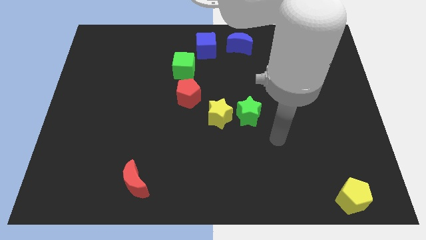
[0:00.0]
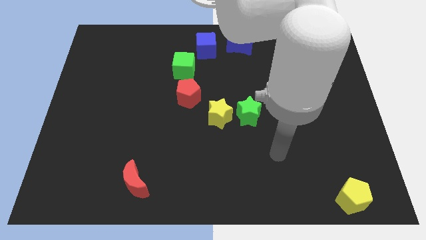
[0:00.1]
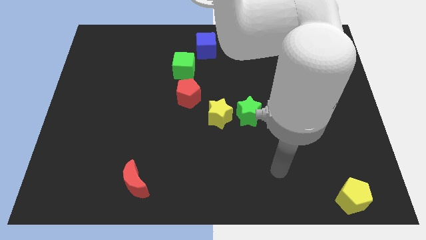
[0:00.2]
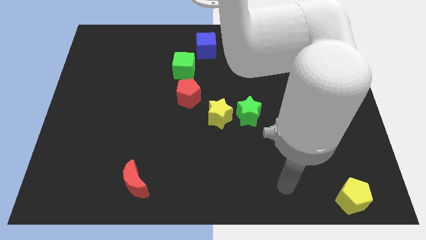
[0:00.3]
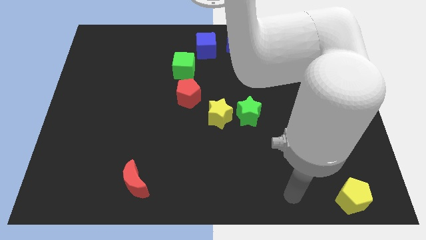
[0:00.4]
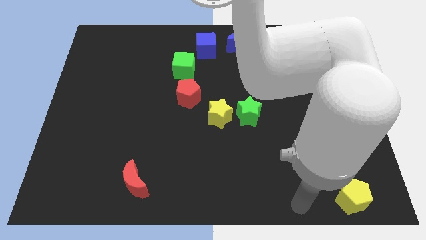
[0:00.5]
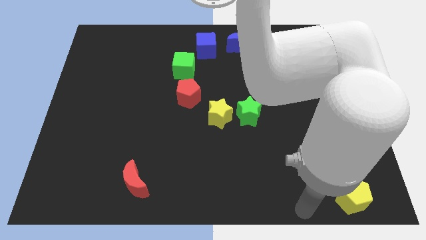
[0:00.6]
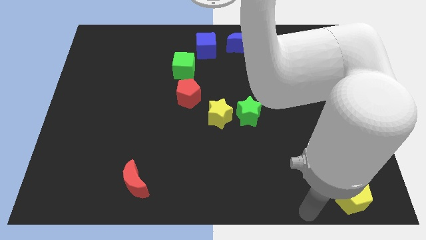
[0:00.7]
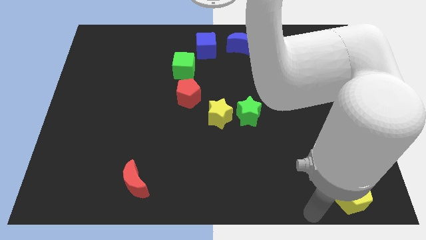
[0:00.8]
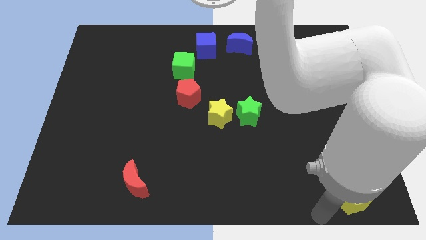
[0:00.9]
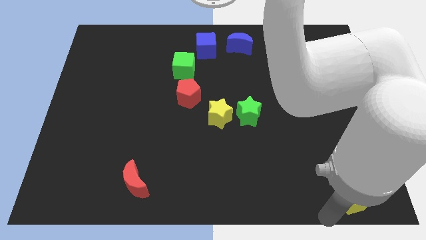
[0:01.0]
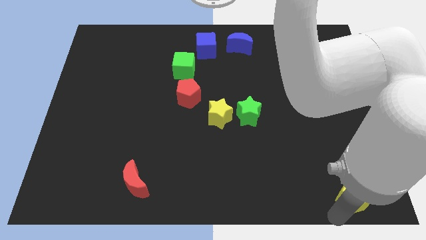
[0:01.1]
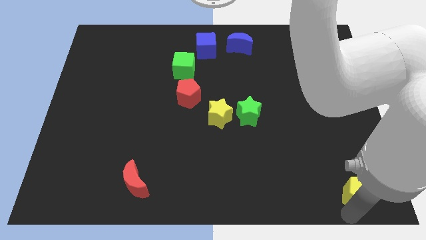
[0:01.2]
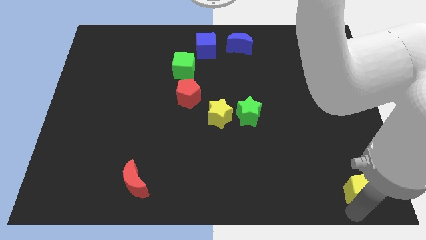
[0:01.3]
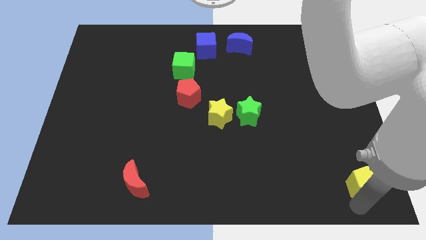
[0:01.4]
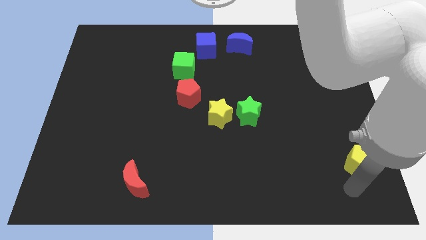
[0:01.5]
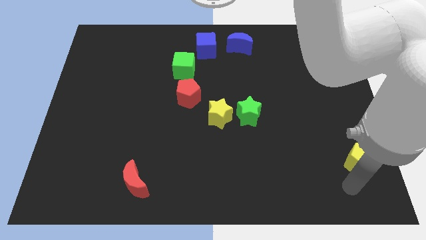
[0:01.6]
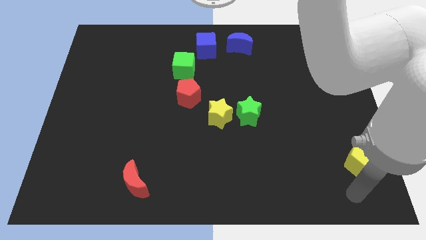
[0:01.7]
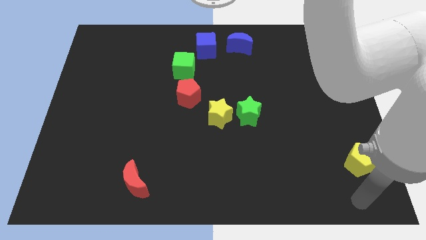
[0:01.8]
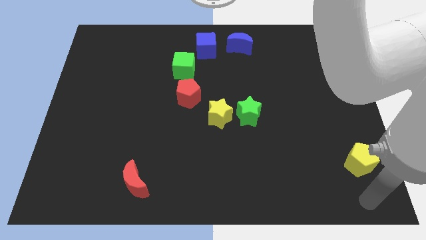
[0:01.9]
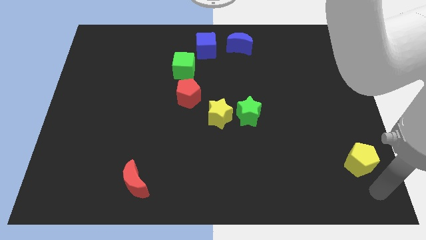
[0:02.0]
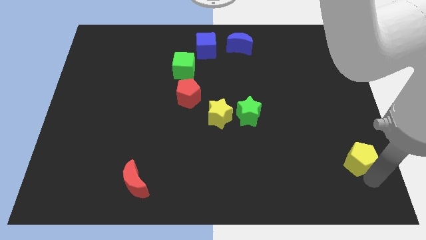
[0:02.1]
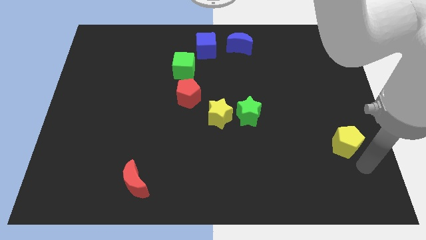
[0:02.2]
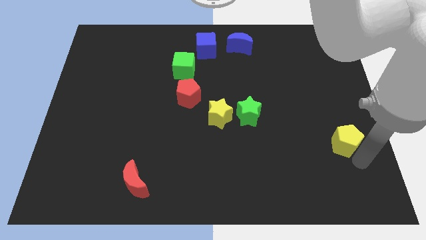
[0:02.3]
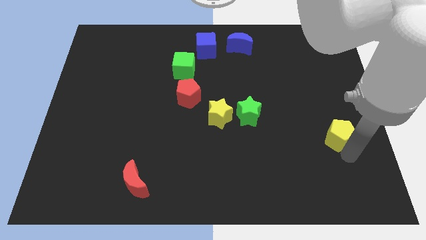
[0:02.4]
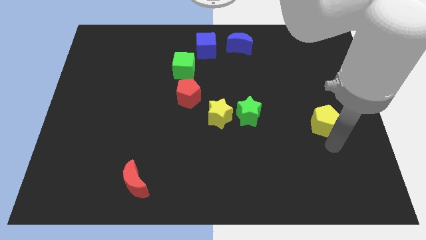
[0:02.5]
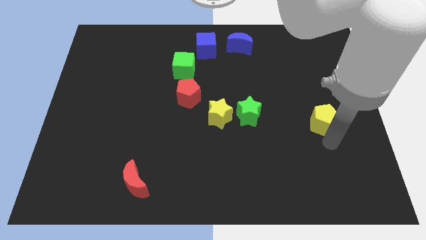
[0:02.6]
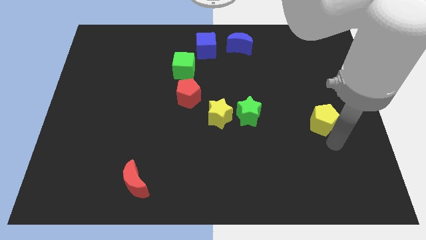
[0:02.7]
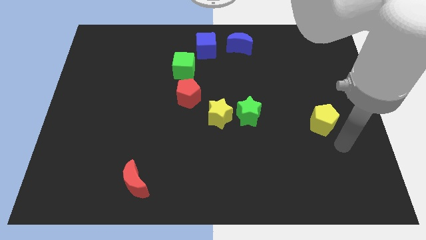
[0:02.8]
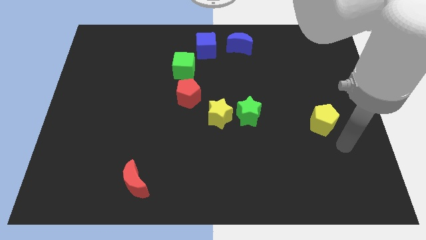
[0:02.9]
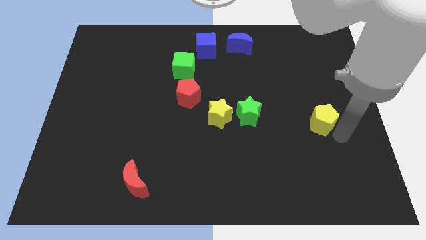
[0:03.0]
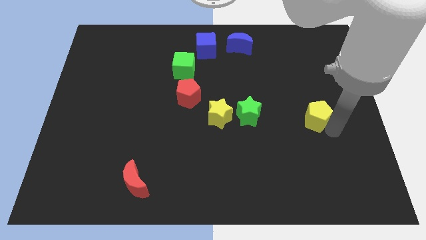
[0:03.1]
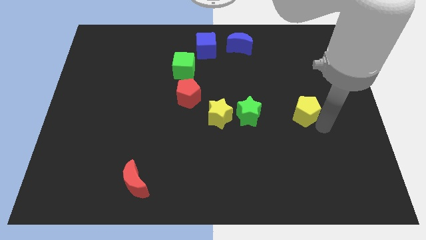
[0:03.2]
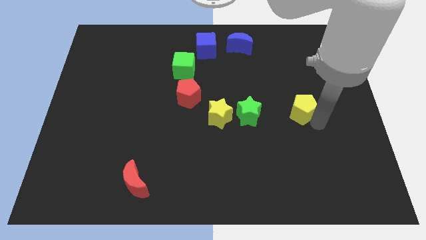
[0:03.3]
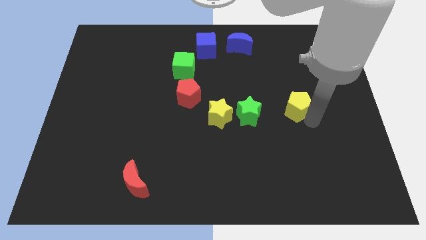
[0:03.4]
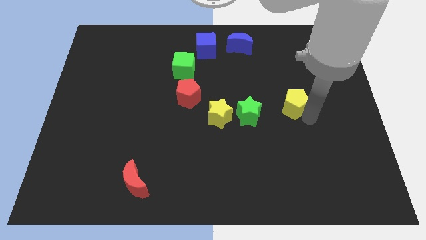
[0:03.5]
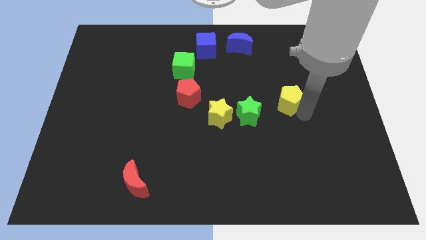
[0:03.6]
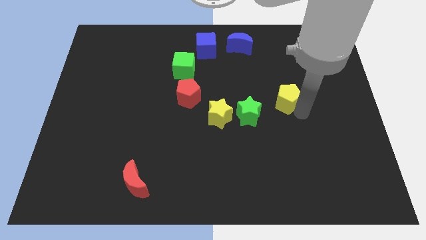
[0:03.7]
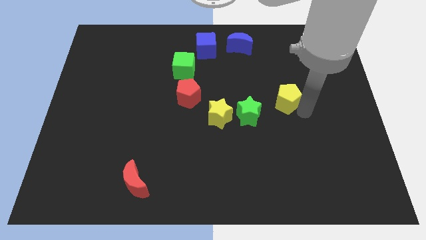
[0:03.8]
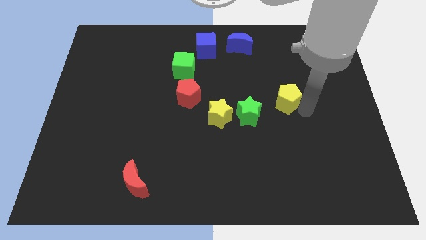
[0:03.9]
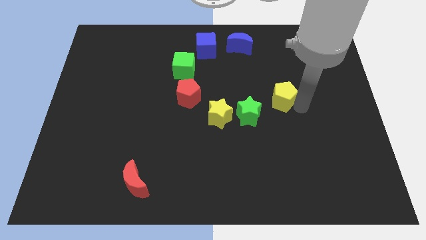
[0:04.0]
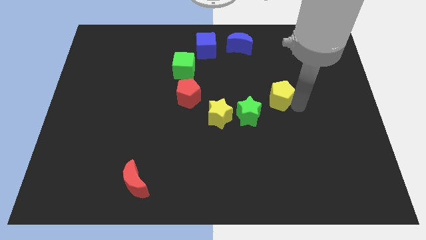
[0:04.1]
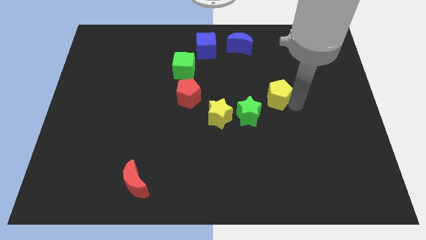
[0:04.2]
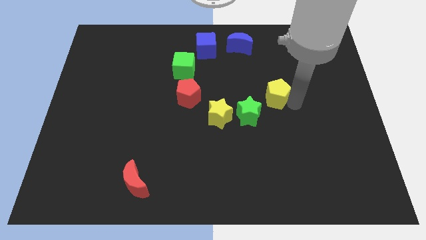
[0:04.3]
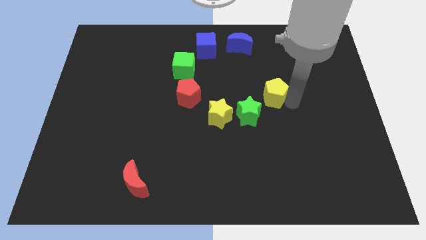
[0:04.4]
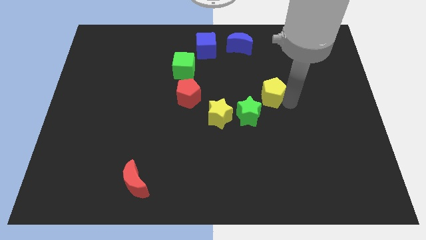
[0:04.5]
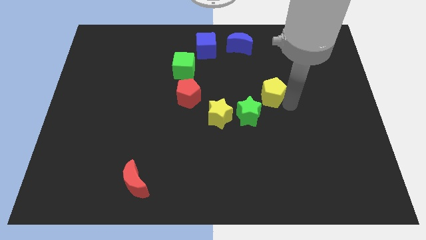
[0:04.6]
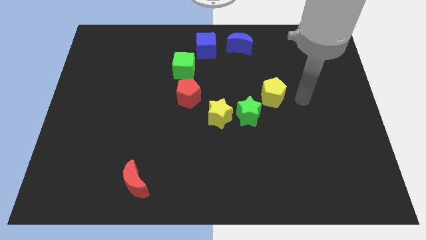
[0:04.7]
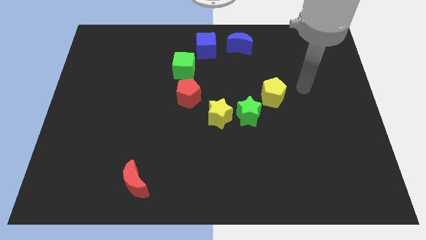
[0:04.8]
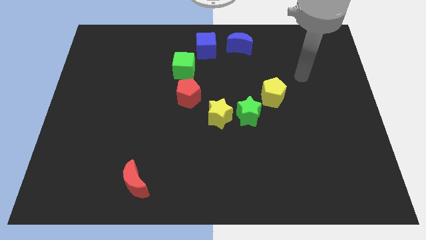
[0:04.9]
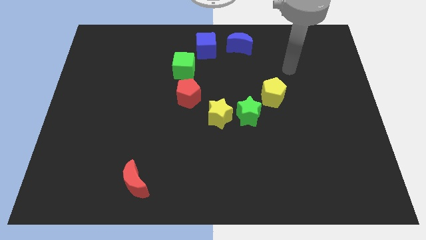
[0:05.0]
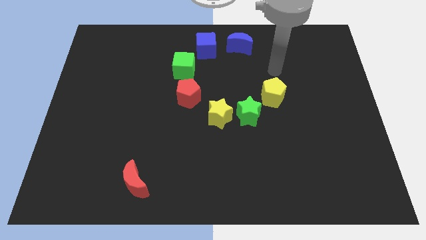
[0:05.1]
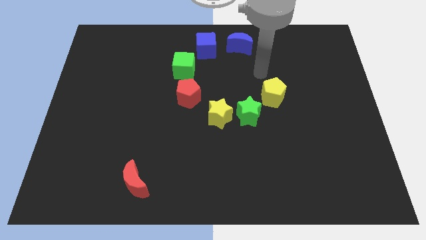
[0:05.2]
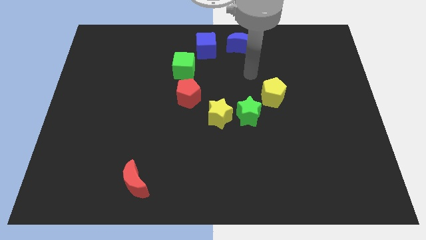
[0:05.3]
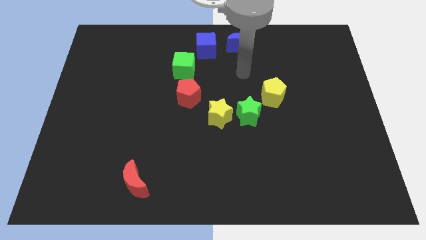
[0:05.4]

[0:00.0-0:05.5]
push the yellow pentagon diagonally up right side of green star

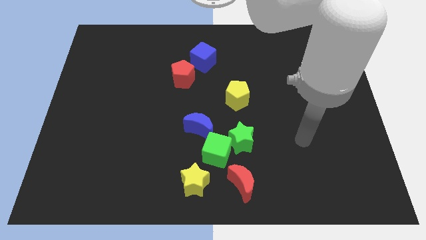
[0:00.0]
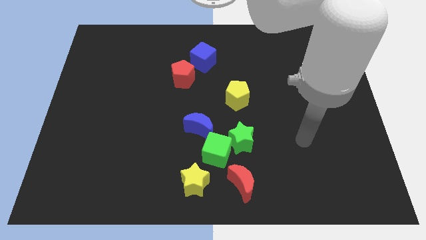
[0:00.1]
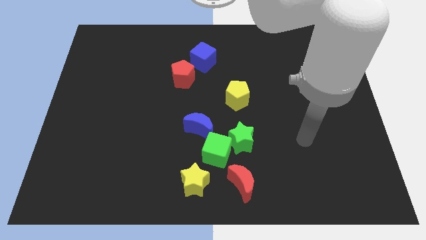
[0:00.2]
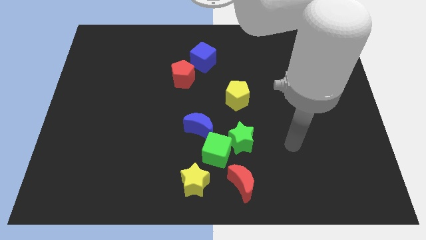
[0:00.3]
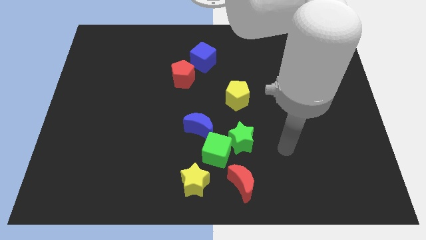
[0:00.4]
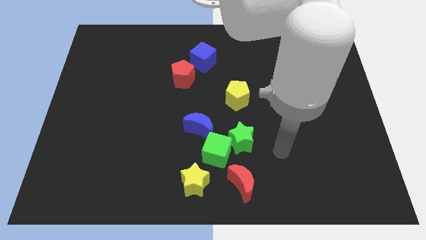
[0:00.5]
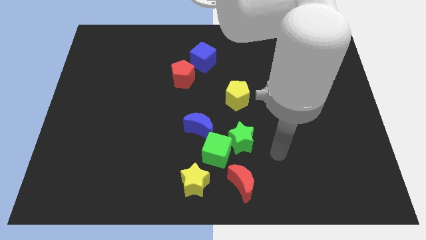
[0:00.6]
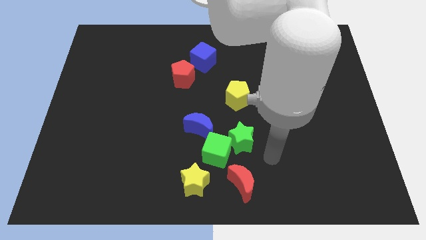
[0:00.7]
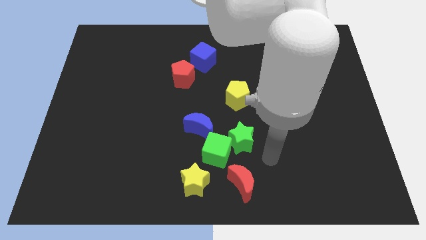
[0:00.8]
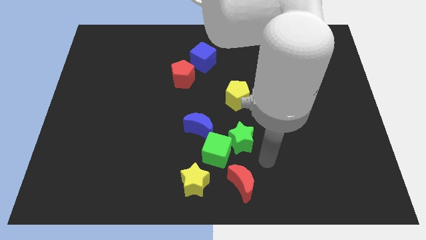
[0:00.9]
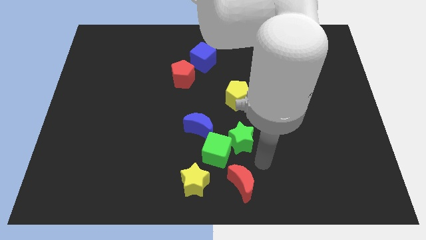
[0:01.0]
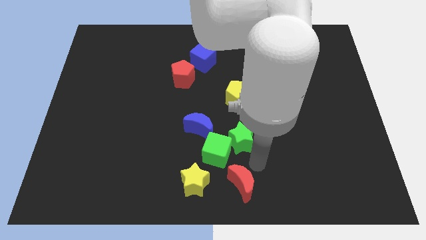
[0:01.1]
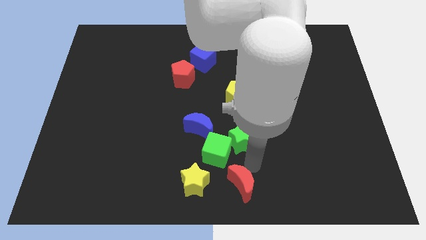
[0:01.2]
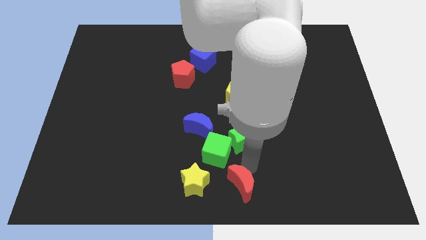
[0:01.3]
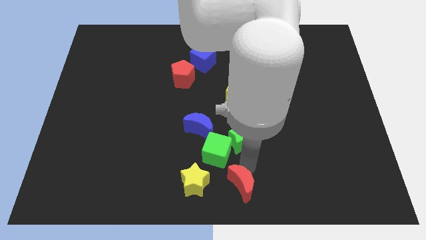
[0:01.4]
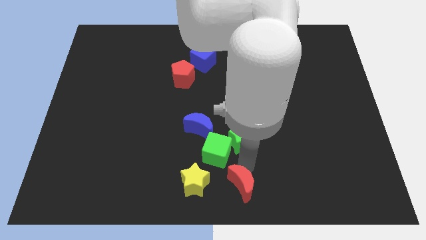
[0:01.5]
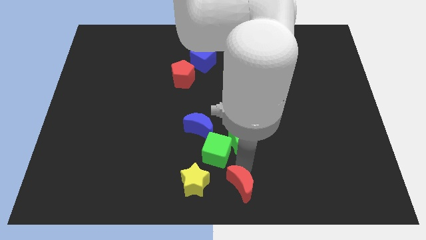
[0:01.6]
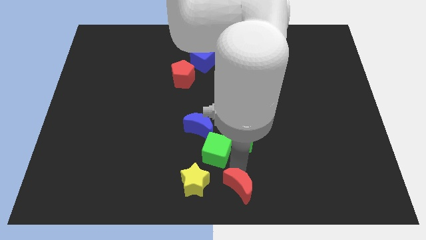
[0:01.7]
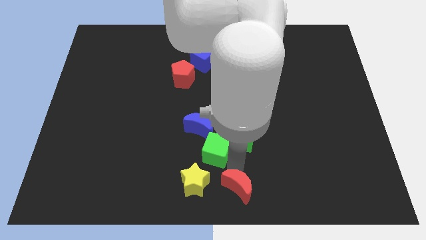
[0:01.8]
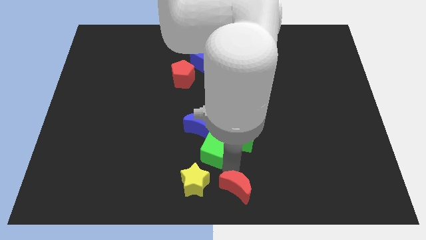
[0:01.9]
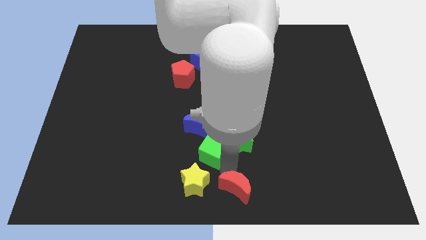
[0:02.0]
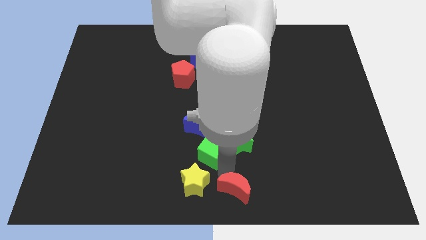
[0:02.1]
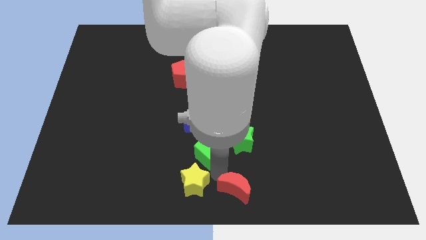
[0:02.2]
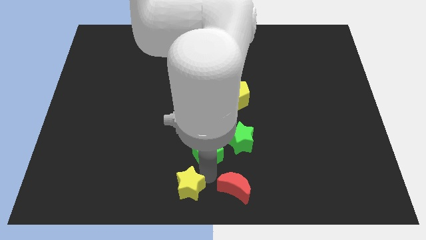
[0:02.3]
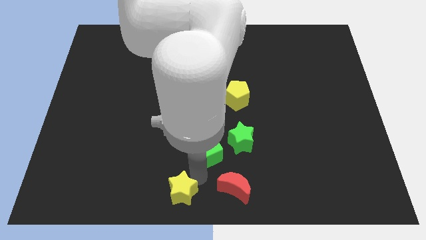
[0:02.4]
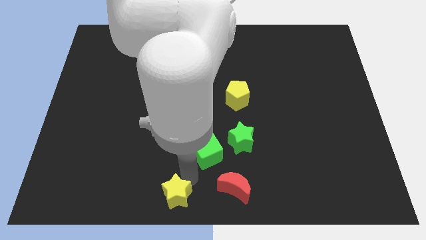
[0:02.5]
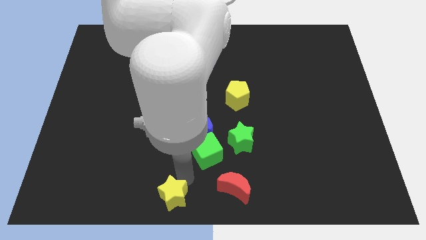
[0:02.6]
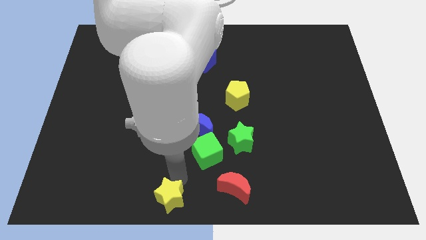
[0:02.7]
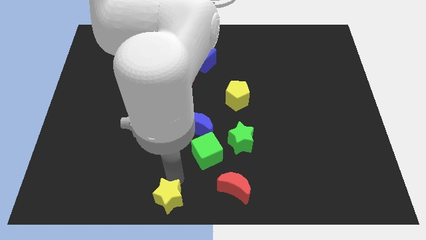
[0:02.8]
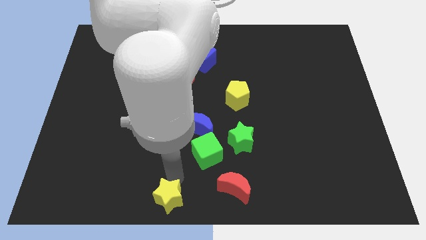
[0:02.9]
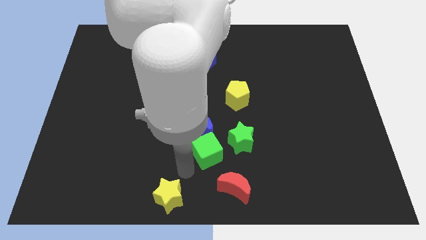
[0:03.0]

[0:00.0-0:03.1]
move the yellow star away from the green cube

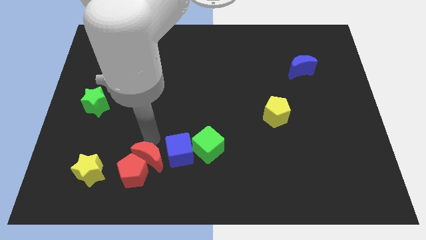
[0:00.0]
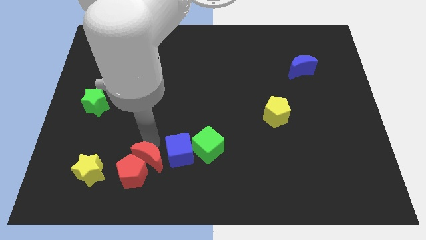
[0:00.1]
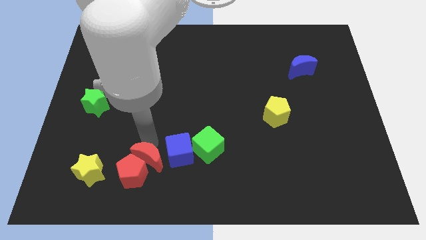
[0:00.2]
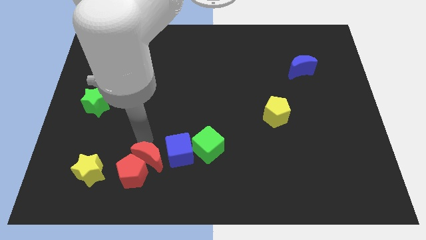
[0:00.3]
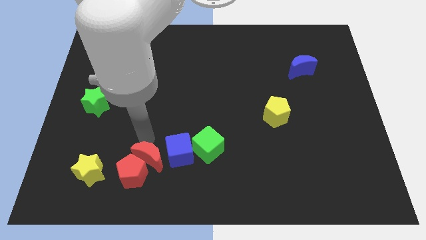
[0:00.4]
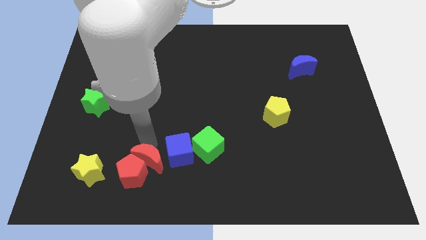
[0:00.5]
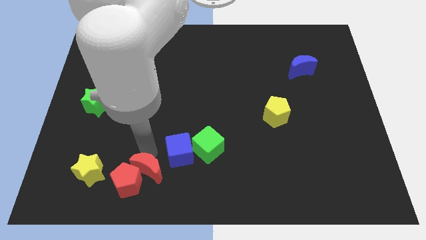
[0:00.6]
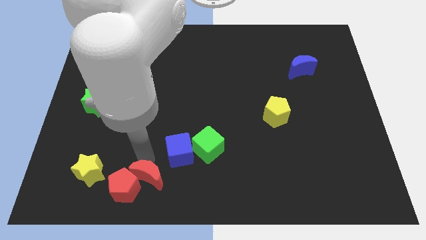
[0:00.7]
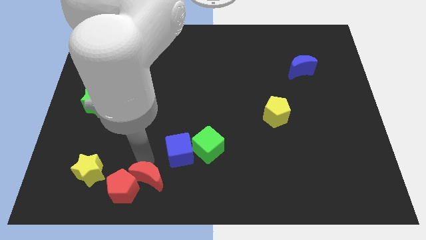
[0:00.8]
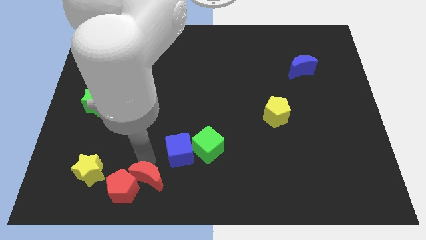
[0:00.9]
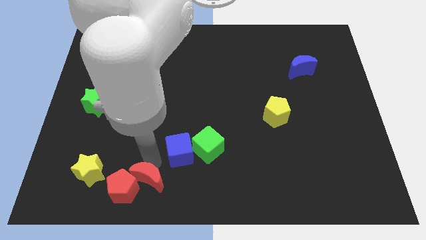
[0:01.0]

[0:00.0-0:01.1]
push the red crescent into the red pentagon
